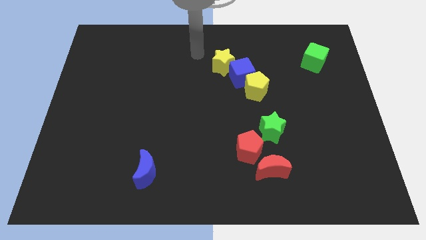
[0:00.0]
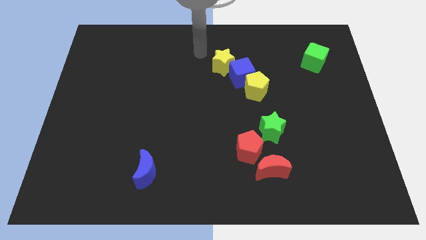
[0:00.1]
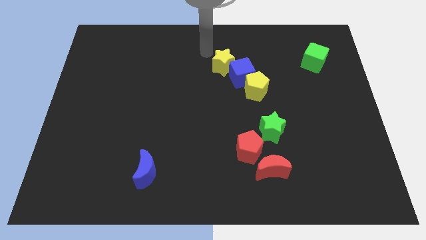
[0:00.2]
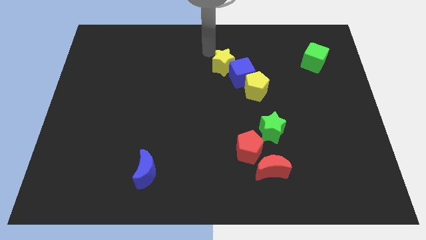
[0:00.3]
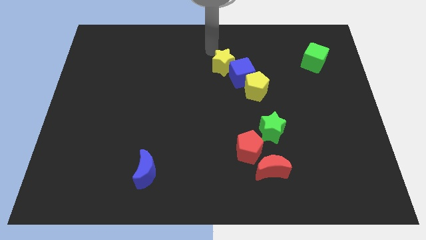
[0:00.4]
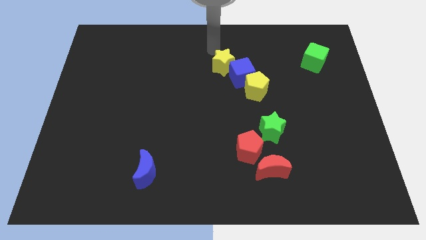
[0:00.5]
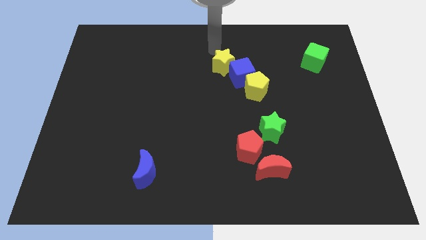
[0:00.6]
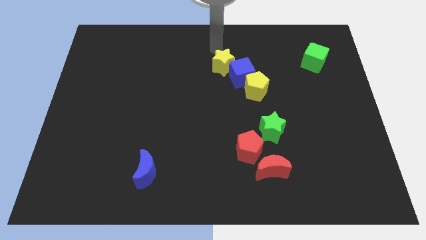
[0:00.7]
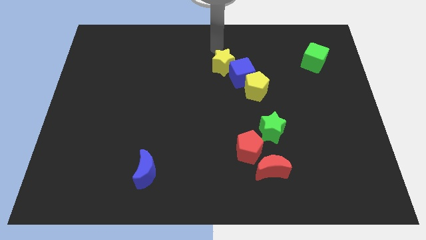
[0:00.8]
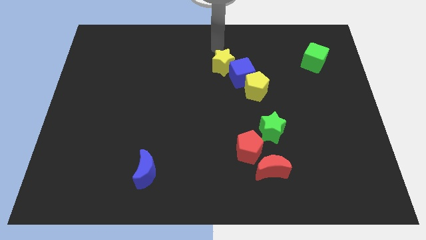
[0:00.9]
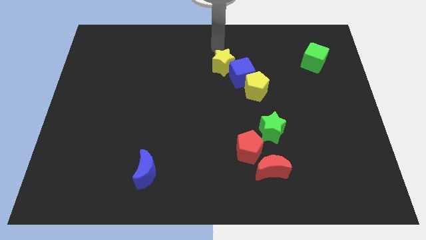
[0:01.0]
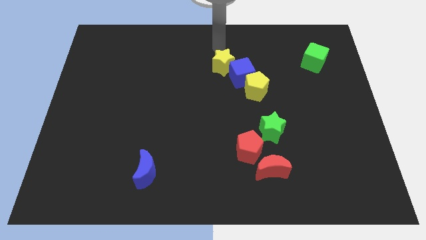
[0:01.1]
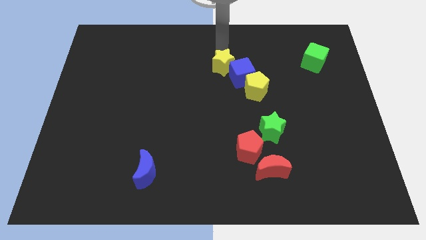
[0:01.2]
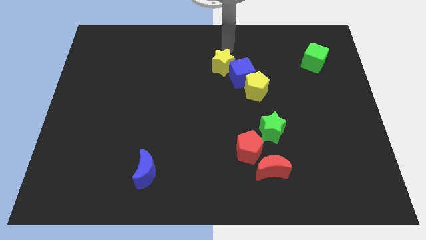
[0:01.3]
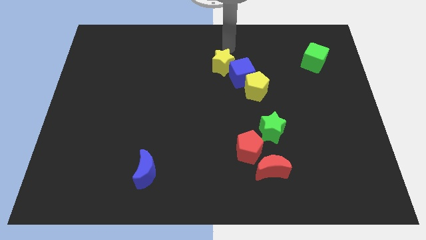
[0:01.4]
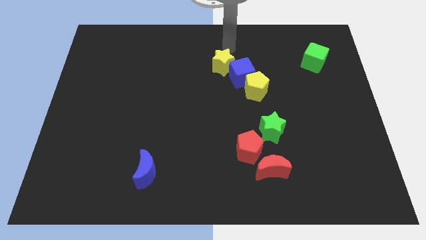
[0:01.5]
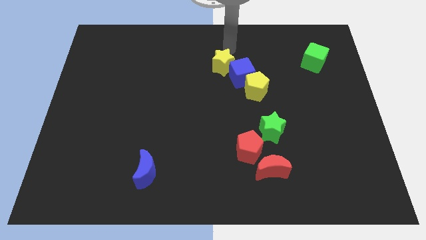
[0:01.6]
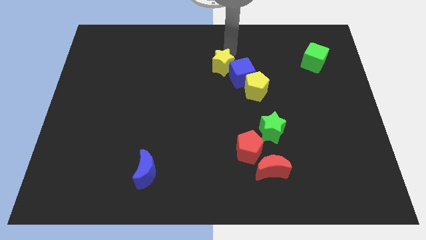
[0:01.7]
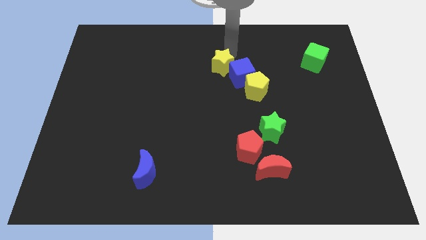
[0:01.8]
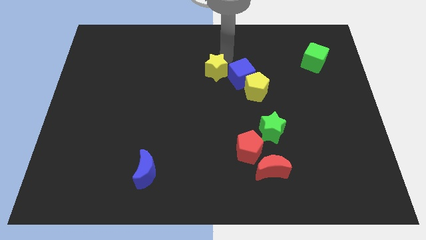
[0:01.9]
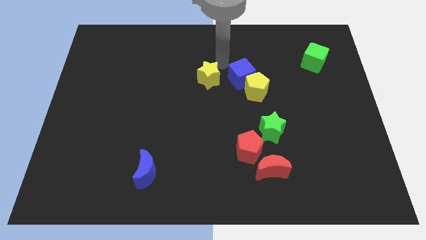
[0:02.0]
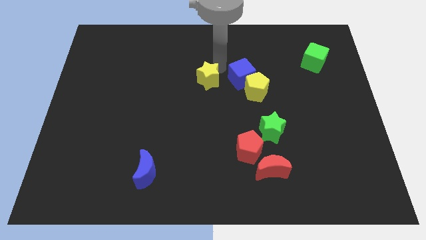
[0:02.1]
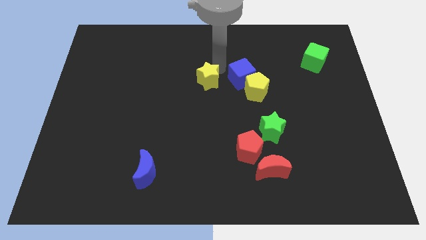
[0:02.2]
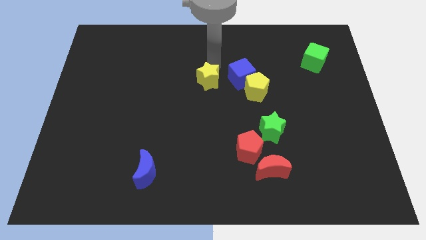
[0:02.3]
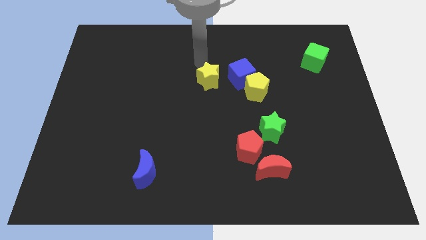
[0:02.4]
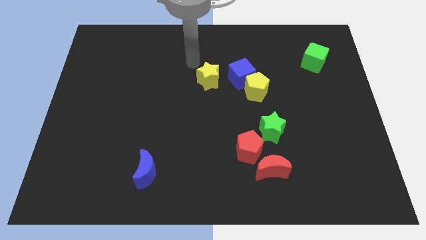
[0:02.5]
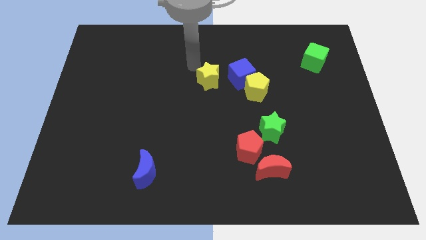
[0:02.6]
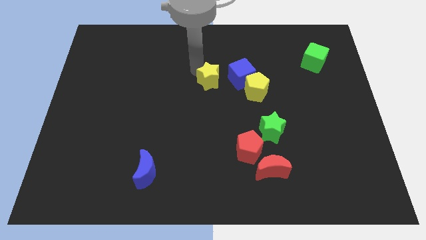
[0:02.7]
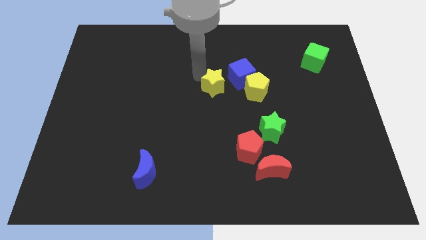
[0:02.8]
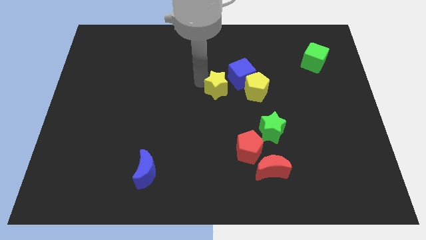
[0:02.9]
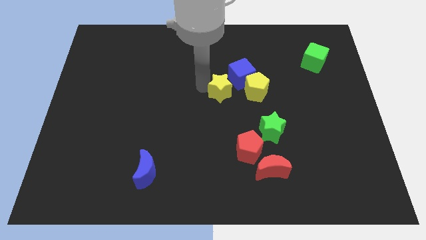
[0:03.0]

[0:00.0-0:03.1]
place the yellow star left to the yellow pentagon

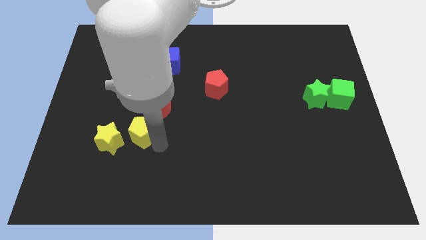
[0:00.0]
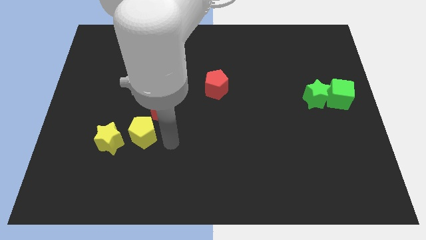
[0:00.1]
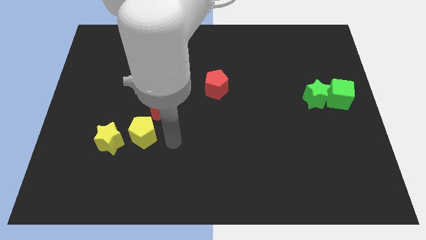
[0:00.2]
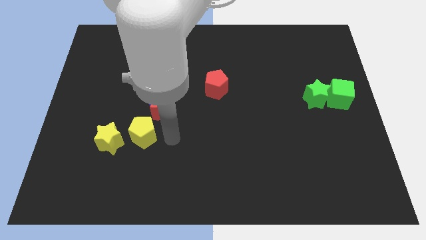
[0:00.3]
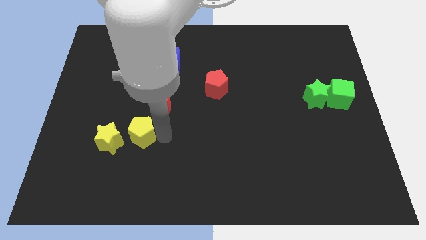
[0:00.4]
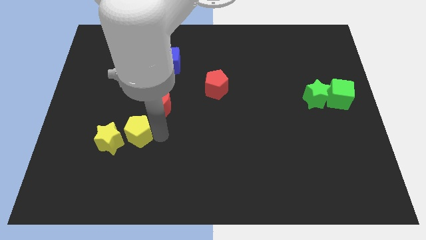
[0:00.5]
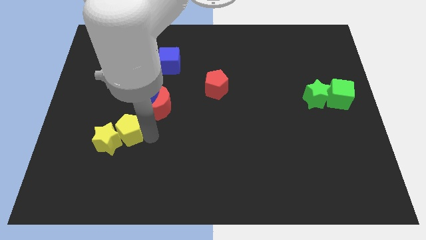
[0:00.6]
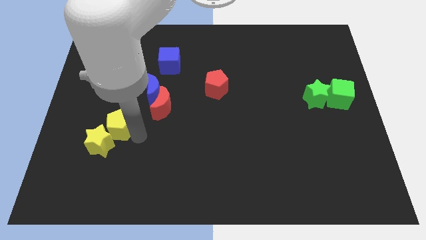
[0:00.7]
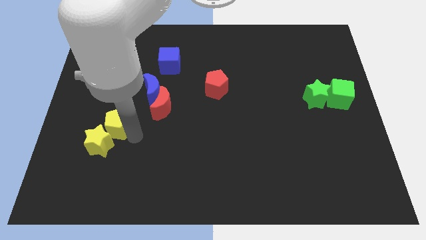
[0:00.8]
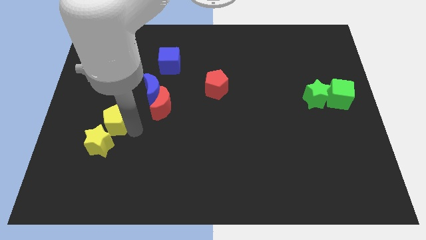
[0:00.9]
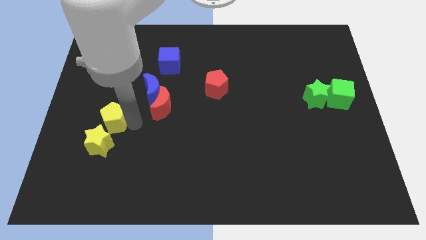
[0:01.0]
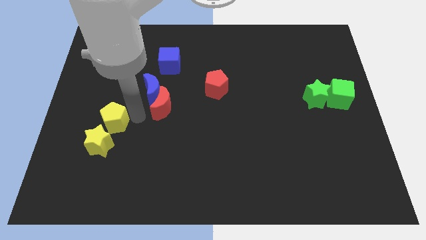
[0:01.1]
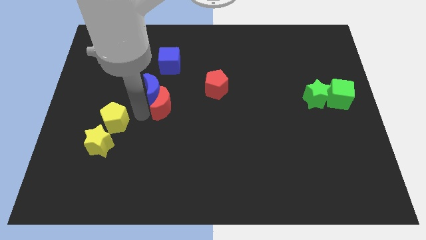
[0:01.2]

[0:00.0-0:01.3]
move the yellow pentagon above the yellow star

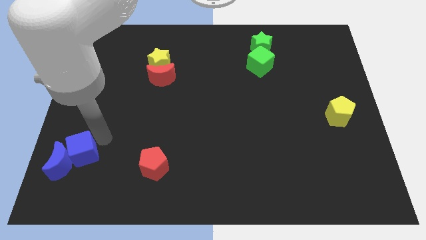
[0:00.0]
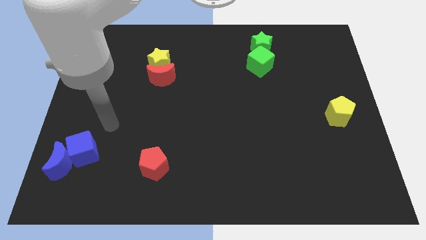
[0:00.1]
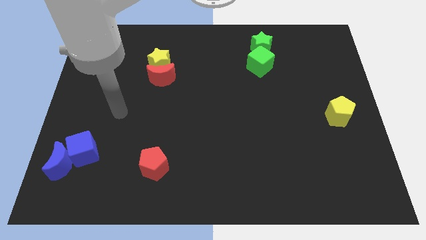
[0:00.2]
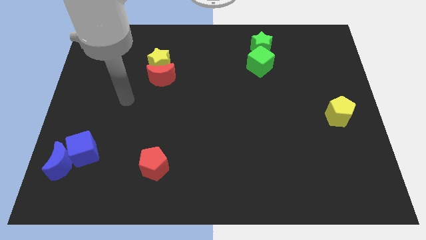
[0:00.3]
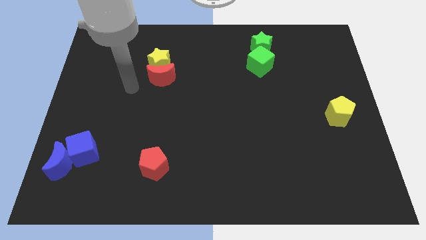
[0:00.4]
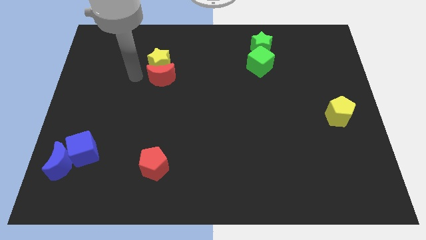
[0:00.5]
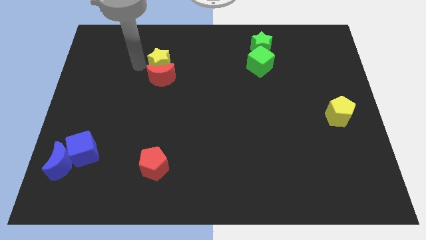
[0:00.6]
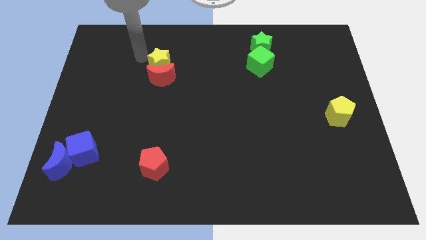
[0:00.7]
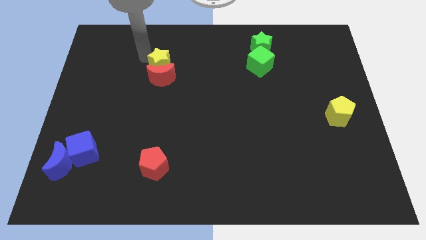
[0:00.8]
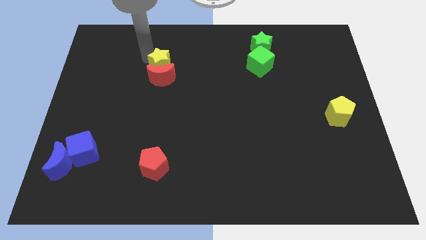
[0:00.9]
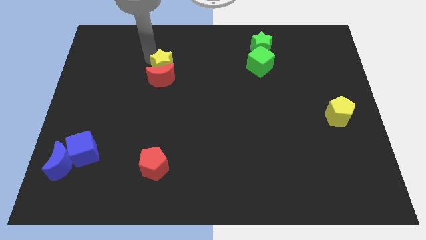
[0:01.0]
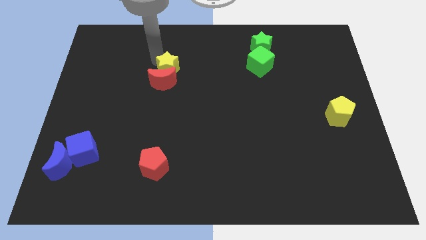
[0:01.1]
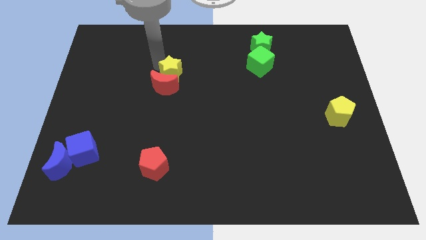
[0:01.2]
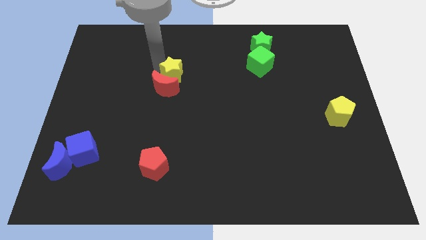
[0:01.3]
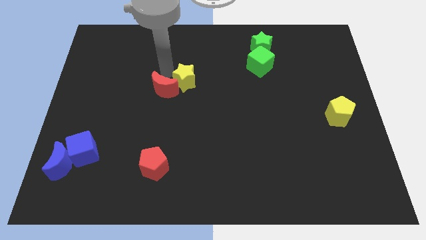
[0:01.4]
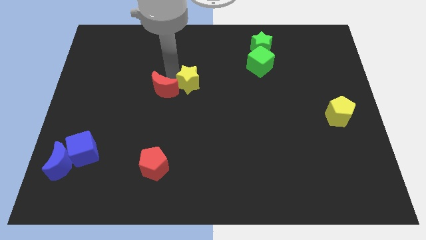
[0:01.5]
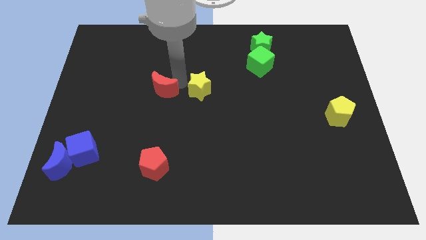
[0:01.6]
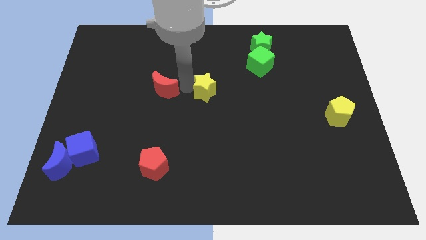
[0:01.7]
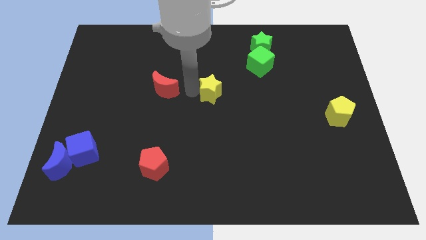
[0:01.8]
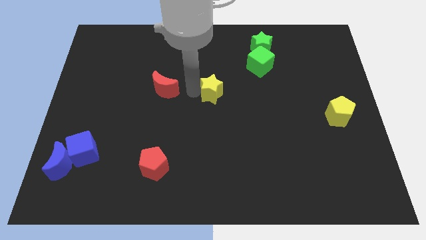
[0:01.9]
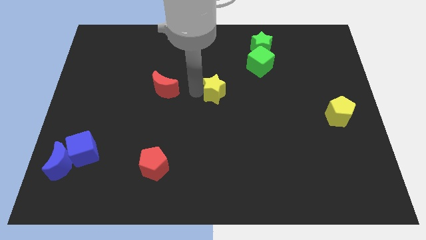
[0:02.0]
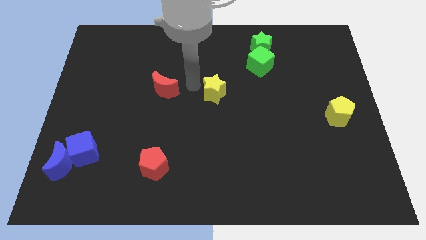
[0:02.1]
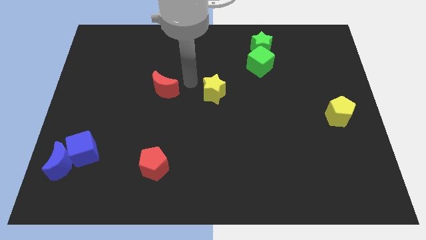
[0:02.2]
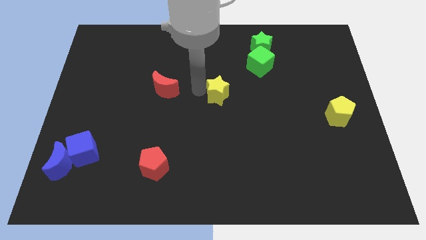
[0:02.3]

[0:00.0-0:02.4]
place the yellow star below the green cube

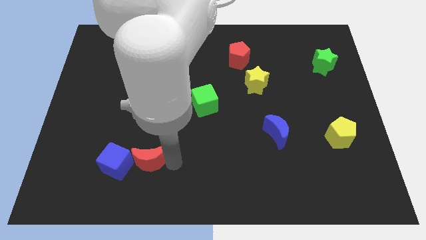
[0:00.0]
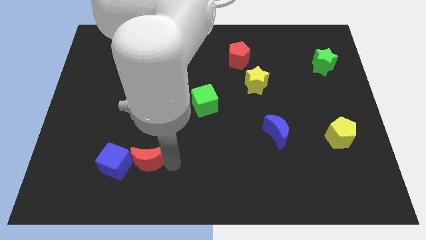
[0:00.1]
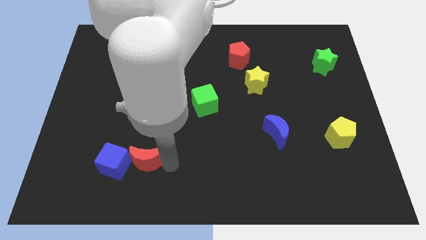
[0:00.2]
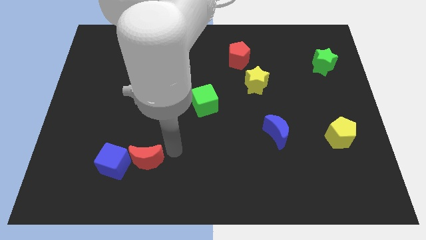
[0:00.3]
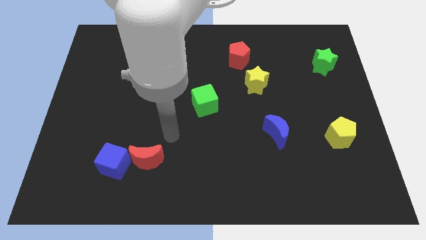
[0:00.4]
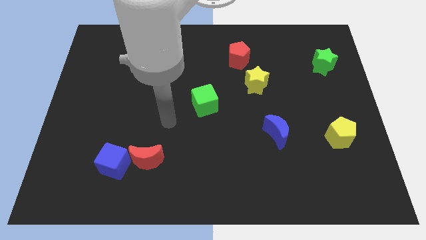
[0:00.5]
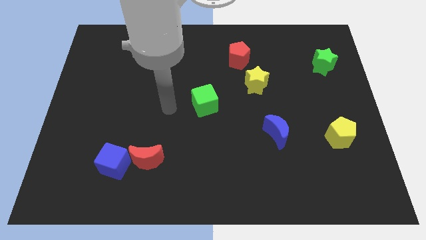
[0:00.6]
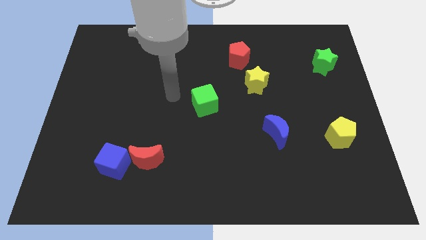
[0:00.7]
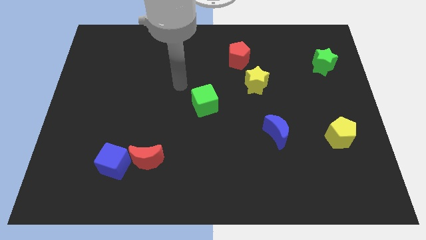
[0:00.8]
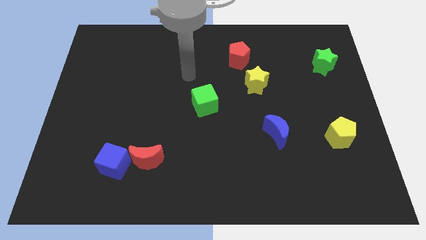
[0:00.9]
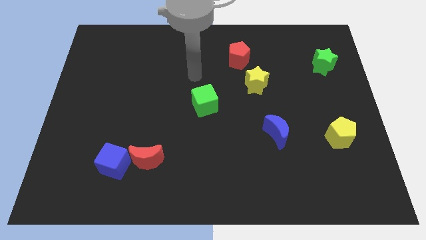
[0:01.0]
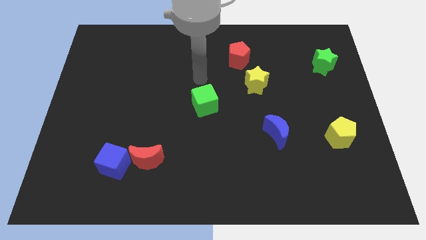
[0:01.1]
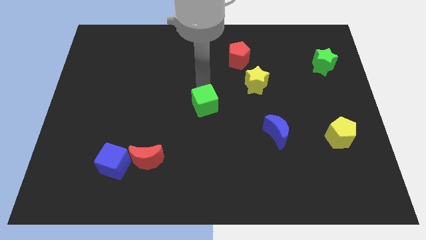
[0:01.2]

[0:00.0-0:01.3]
move the arm above the green cube

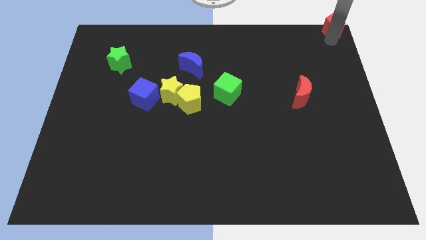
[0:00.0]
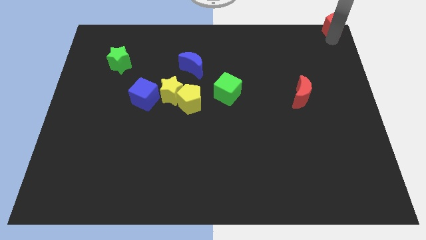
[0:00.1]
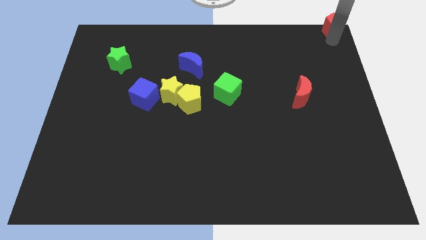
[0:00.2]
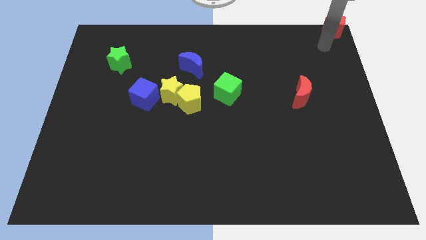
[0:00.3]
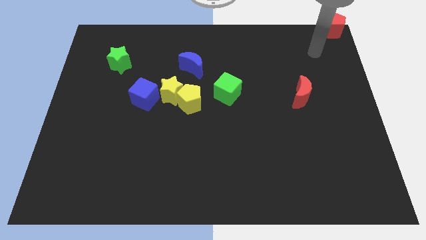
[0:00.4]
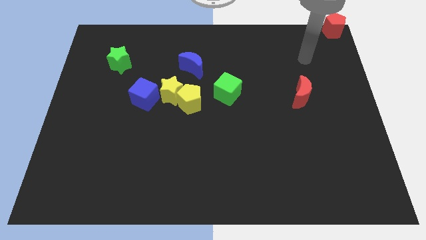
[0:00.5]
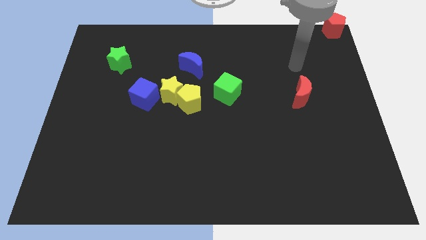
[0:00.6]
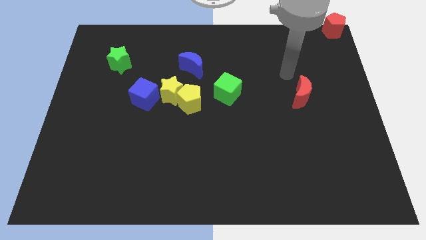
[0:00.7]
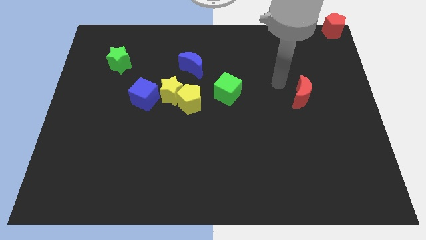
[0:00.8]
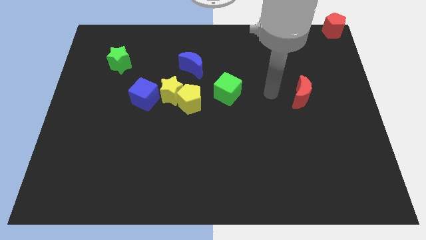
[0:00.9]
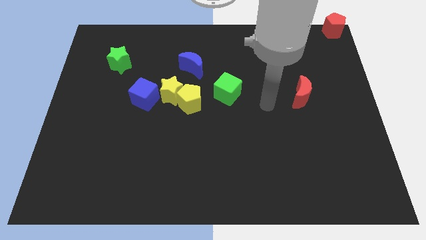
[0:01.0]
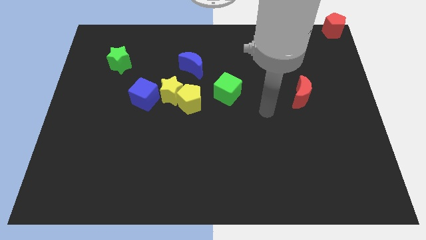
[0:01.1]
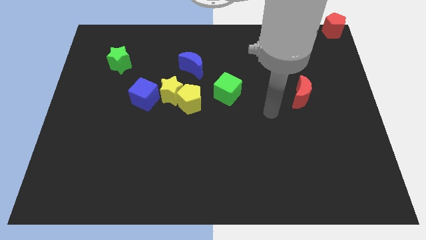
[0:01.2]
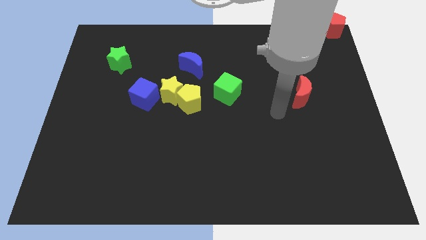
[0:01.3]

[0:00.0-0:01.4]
move the arm diagonal to the red moon
